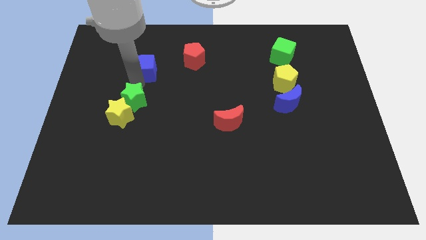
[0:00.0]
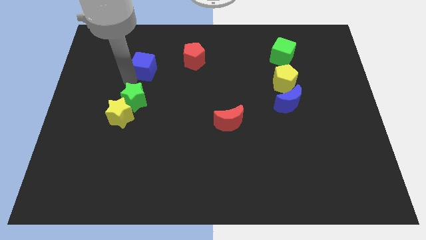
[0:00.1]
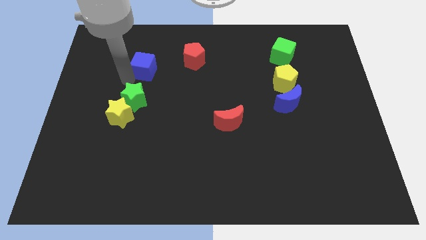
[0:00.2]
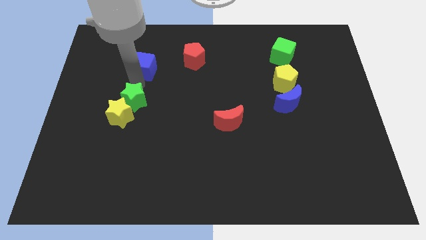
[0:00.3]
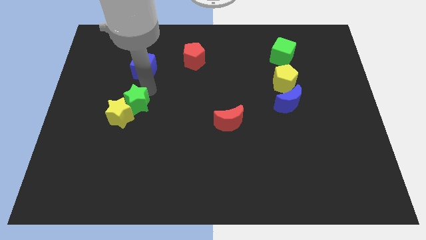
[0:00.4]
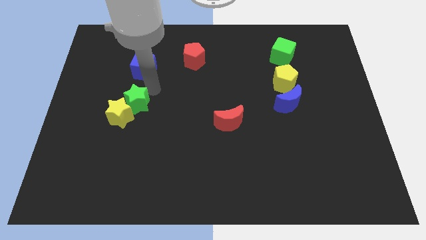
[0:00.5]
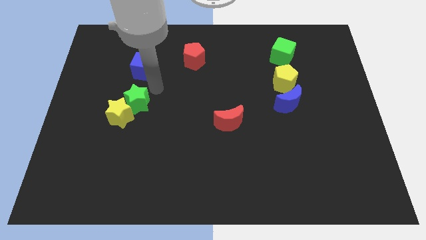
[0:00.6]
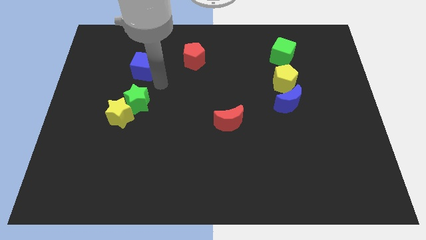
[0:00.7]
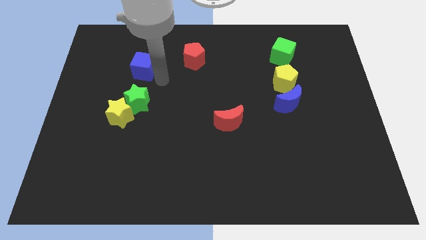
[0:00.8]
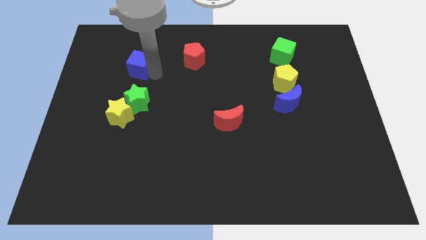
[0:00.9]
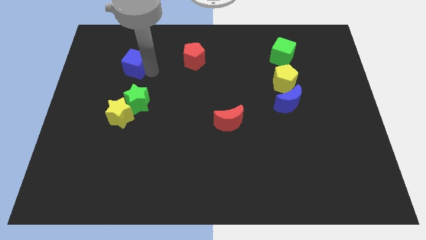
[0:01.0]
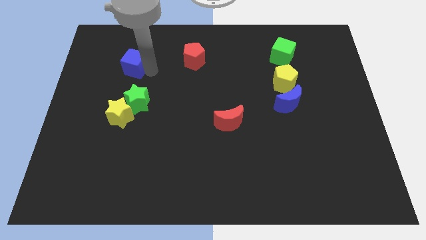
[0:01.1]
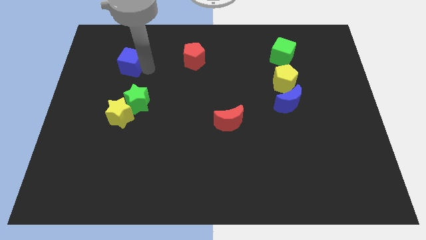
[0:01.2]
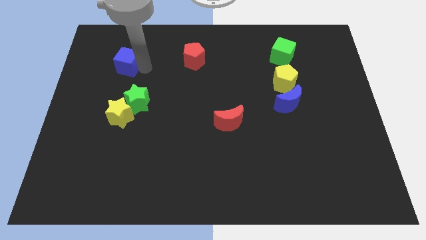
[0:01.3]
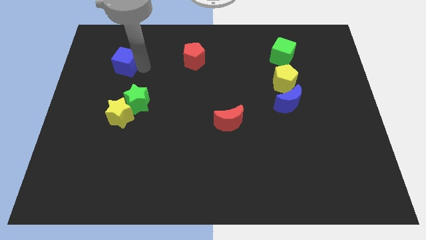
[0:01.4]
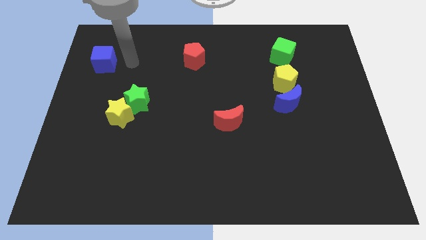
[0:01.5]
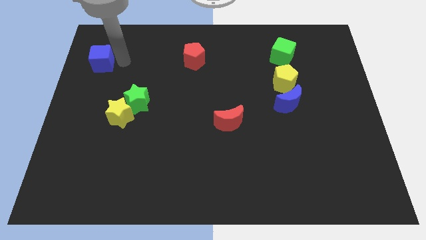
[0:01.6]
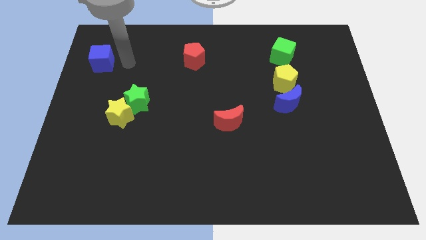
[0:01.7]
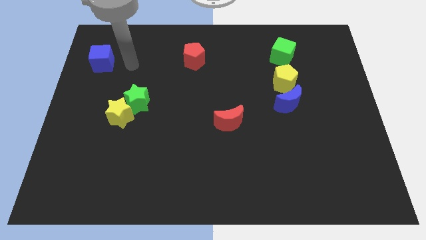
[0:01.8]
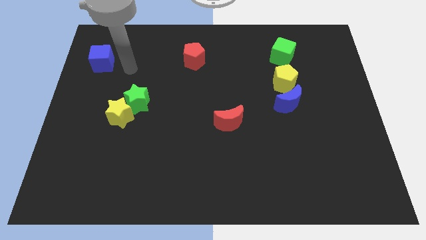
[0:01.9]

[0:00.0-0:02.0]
move the blue cube horizontally to the left side of the red pentagon

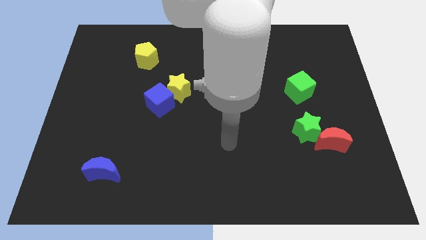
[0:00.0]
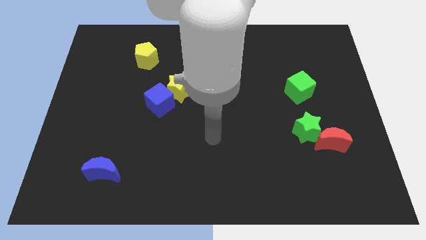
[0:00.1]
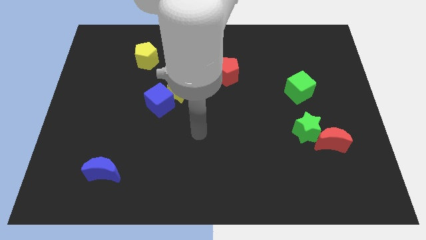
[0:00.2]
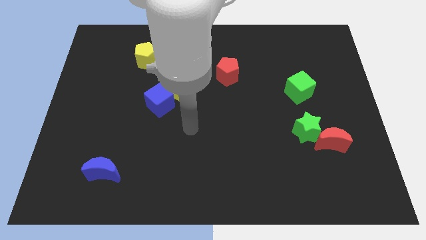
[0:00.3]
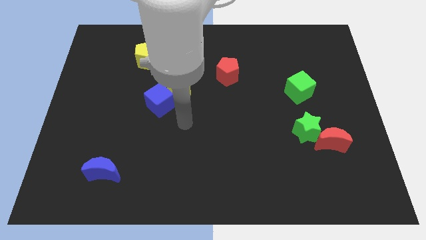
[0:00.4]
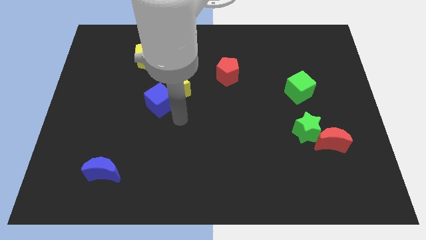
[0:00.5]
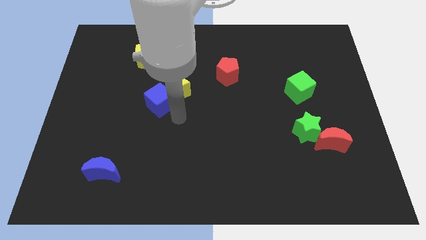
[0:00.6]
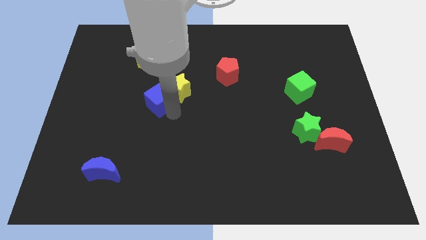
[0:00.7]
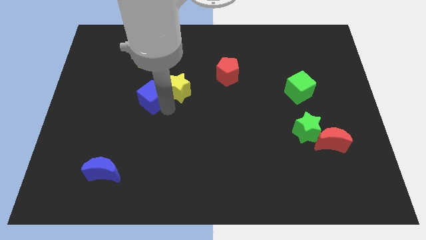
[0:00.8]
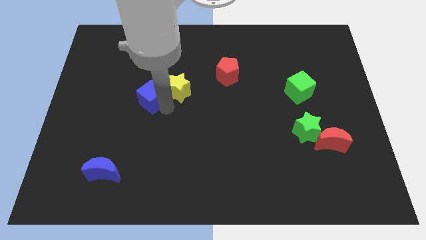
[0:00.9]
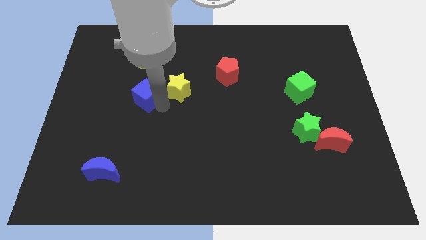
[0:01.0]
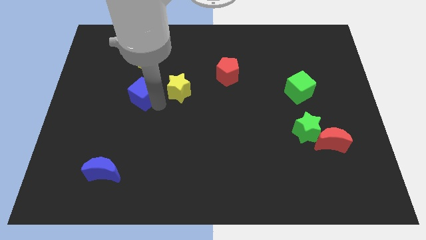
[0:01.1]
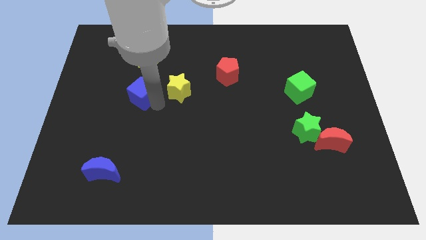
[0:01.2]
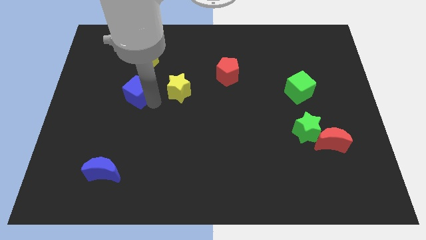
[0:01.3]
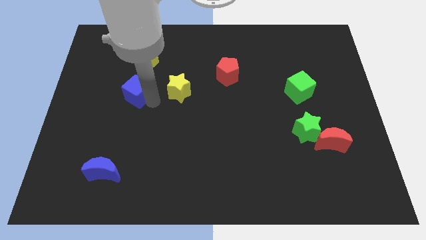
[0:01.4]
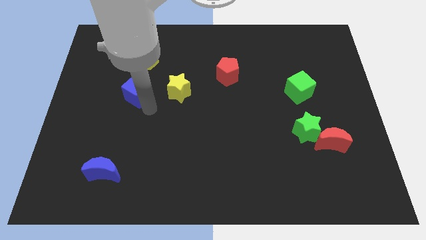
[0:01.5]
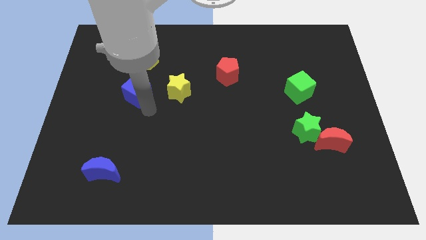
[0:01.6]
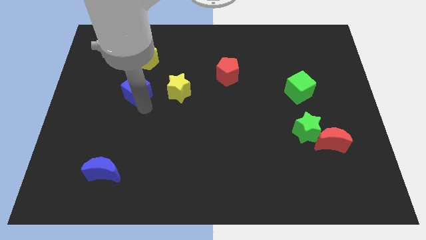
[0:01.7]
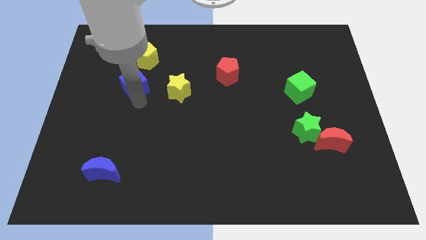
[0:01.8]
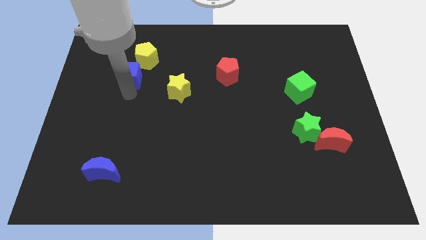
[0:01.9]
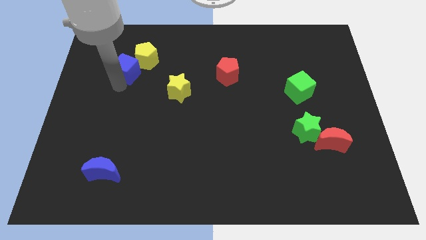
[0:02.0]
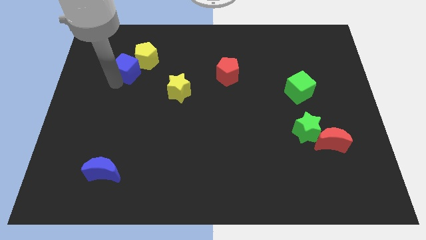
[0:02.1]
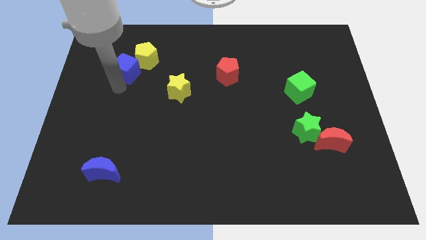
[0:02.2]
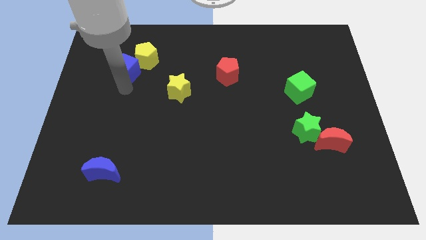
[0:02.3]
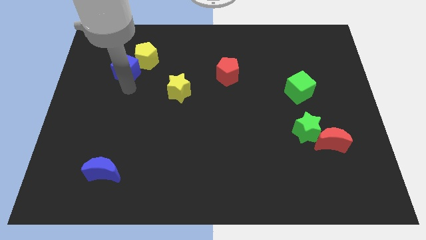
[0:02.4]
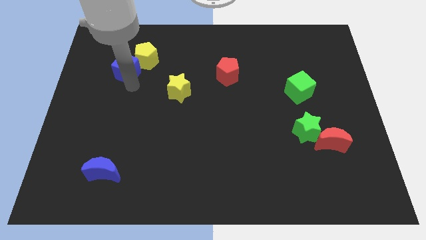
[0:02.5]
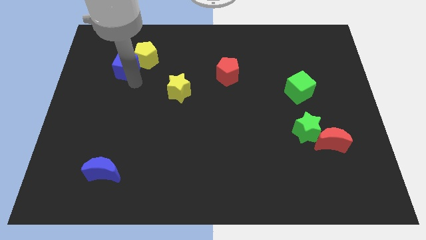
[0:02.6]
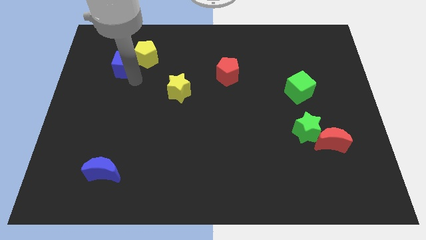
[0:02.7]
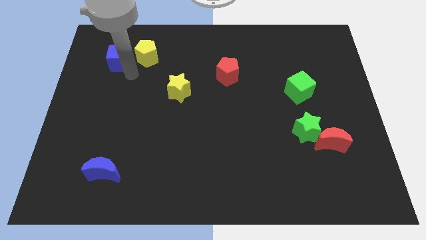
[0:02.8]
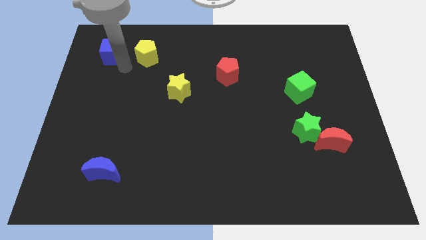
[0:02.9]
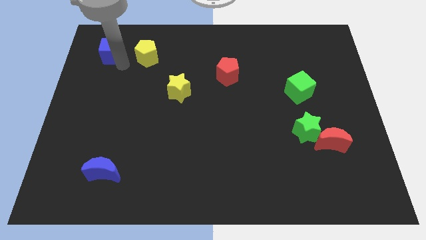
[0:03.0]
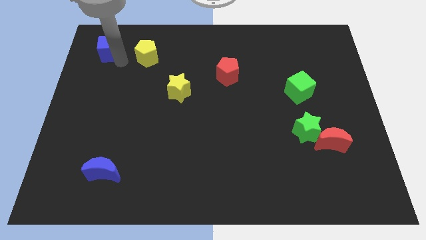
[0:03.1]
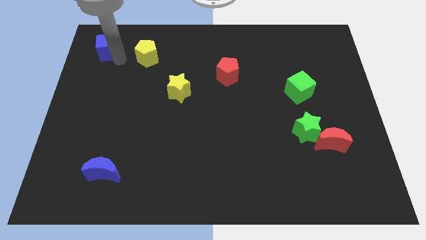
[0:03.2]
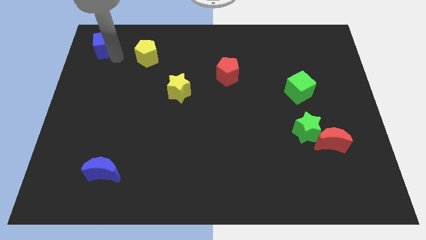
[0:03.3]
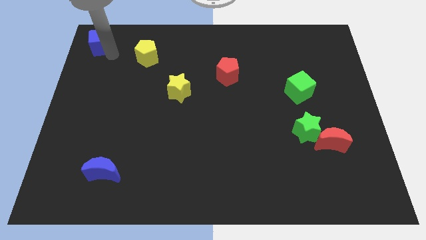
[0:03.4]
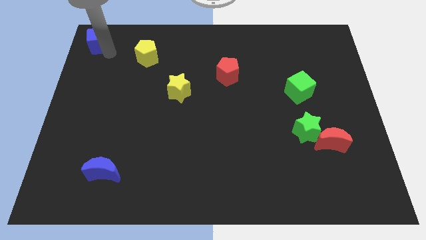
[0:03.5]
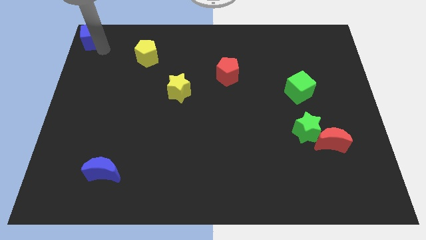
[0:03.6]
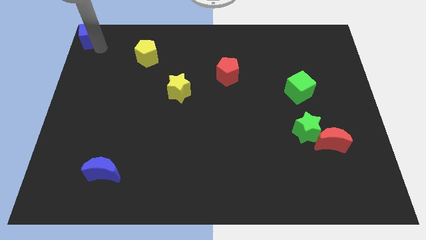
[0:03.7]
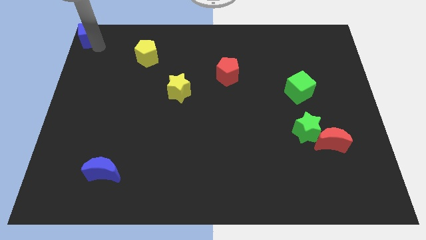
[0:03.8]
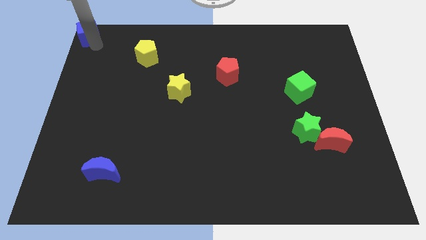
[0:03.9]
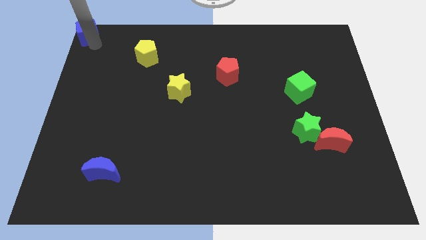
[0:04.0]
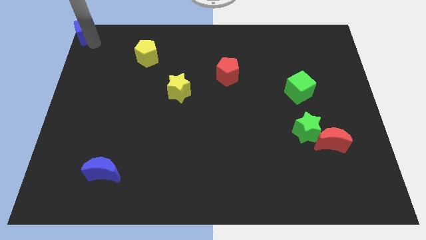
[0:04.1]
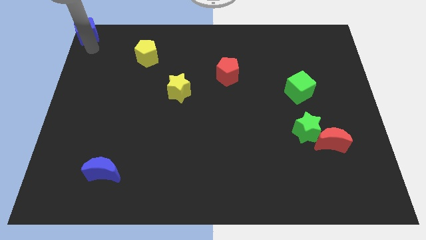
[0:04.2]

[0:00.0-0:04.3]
push the blue cube towards the top left corner of the board

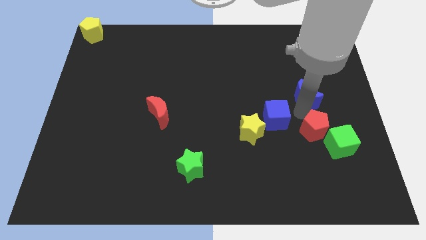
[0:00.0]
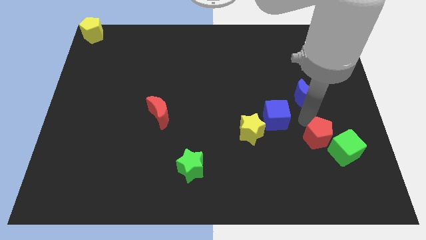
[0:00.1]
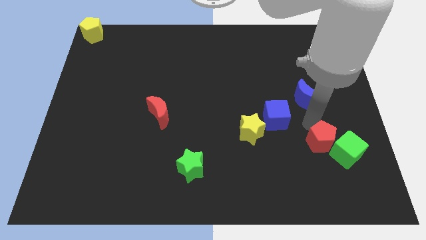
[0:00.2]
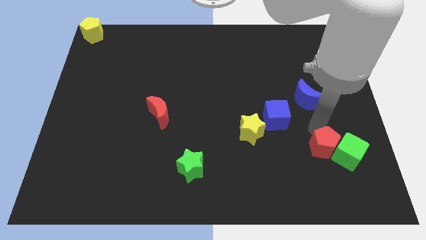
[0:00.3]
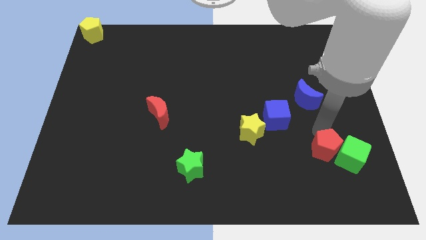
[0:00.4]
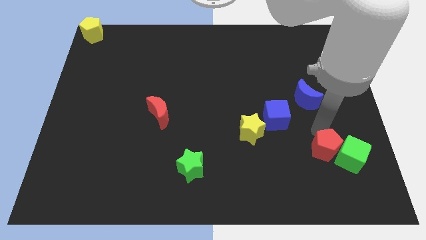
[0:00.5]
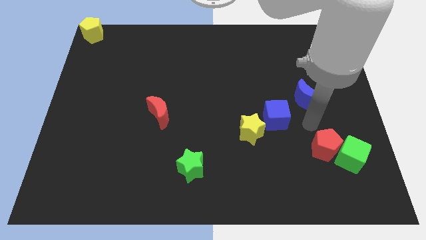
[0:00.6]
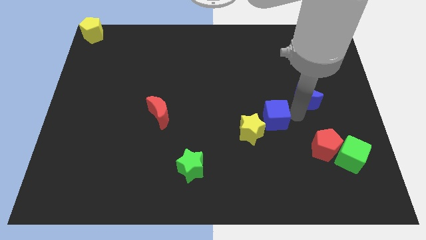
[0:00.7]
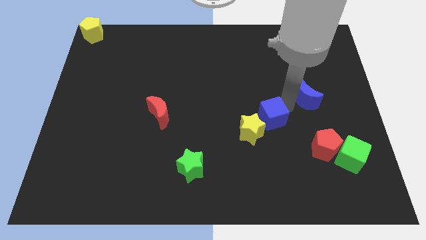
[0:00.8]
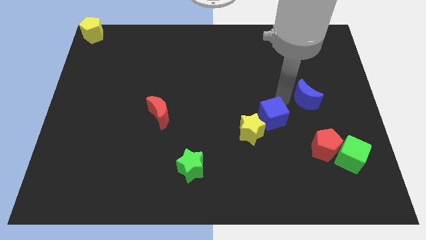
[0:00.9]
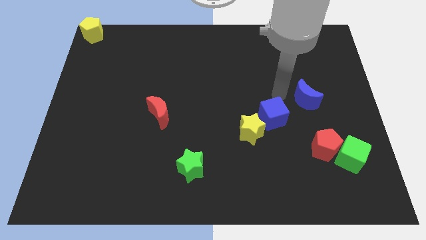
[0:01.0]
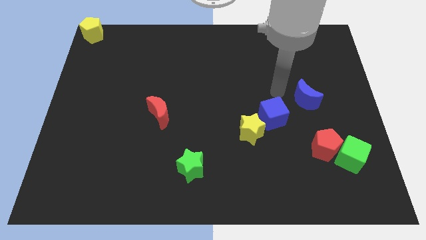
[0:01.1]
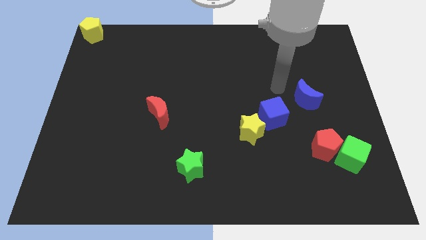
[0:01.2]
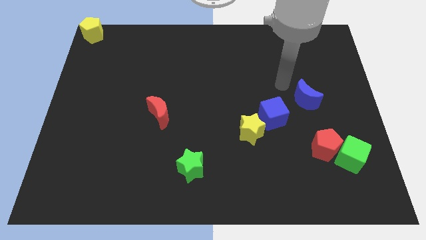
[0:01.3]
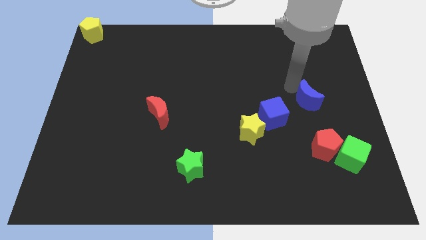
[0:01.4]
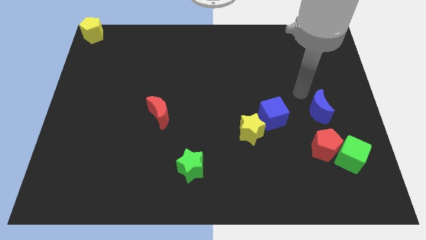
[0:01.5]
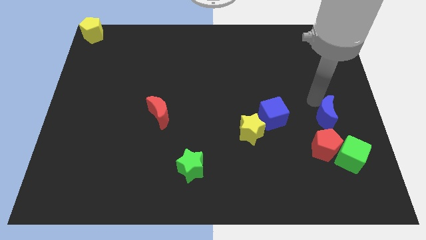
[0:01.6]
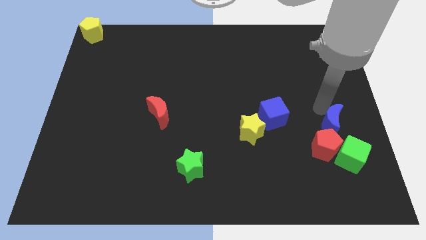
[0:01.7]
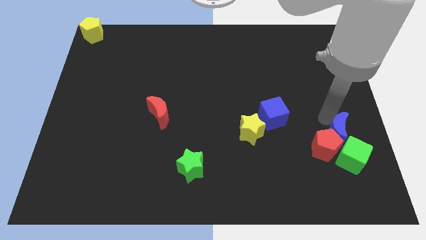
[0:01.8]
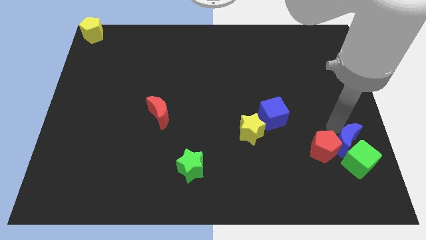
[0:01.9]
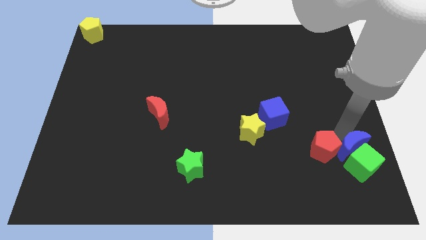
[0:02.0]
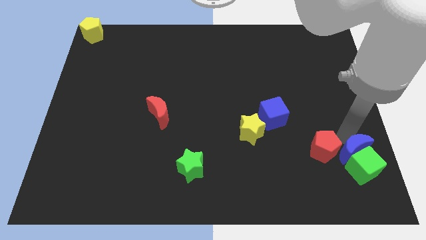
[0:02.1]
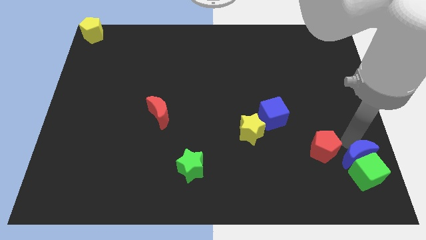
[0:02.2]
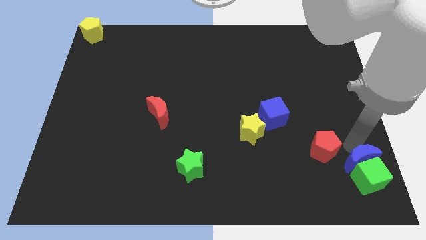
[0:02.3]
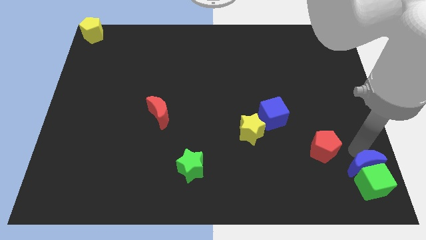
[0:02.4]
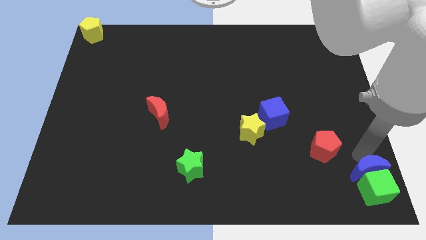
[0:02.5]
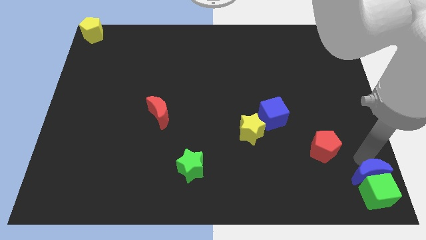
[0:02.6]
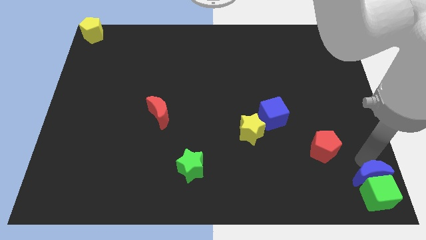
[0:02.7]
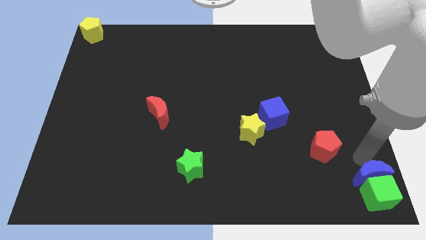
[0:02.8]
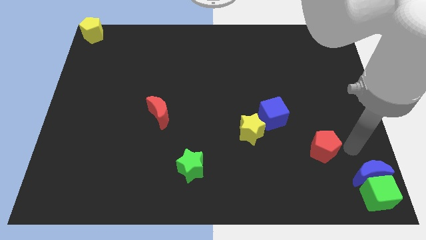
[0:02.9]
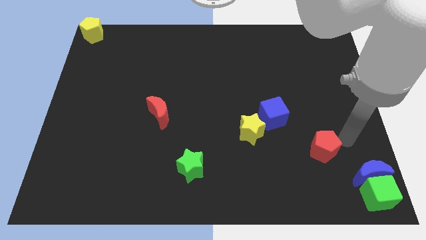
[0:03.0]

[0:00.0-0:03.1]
push blue moon in to green cube
